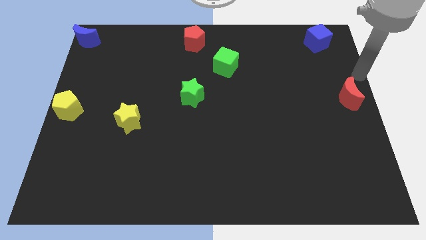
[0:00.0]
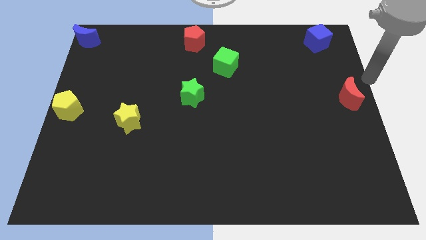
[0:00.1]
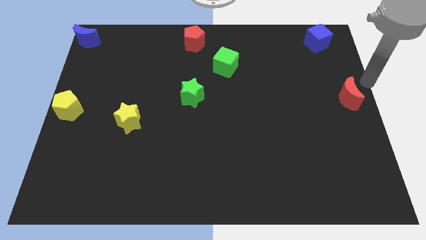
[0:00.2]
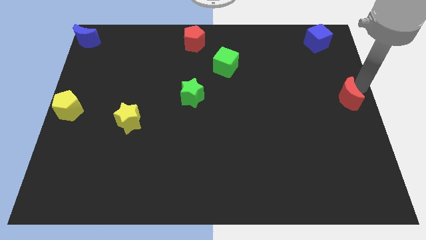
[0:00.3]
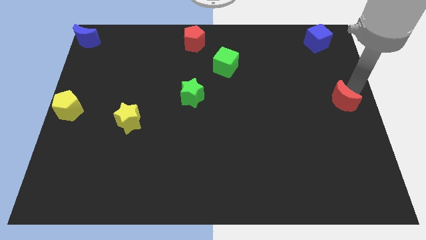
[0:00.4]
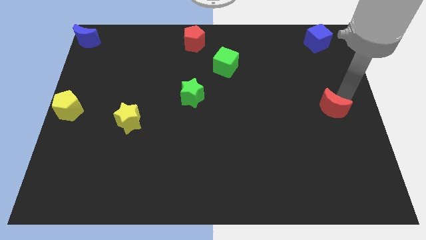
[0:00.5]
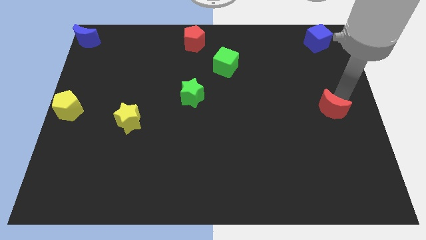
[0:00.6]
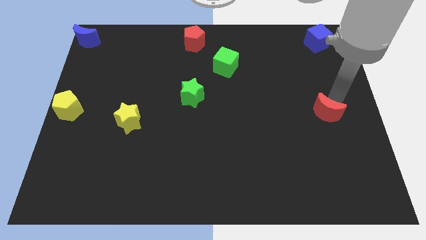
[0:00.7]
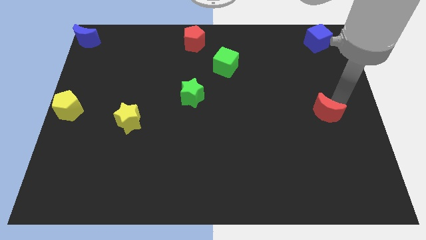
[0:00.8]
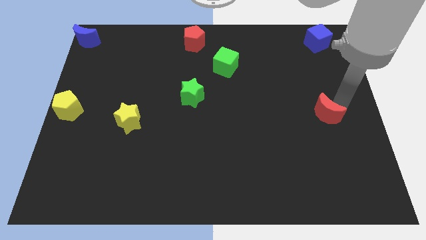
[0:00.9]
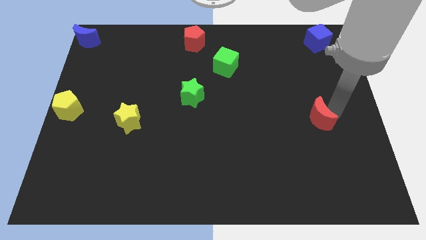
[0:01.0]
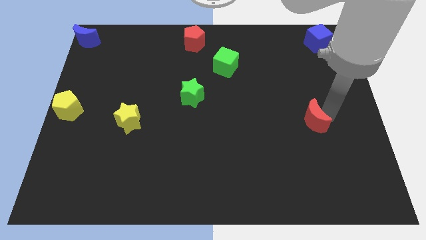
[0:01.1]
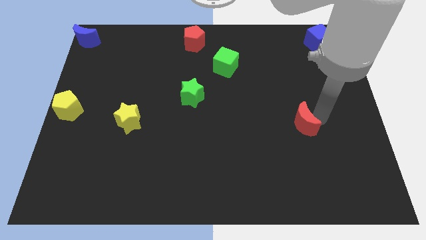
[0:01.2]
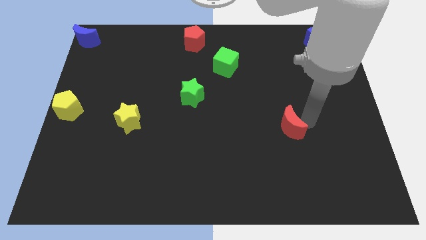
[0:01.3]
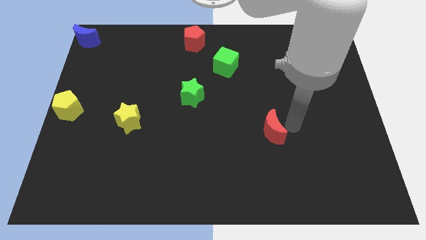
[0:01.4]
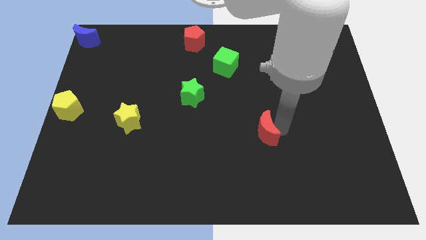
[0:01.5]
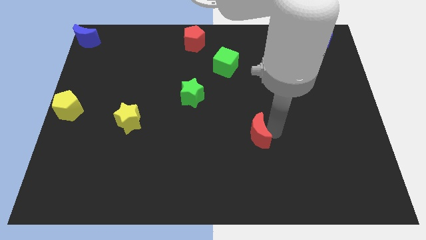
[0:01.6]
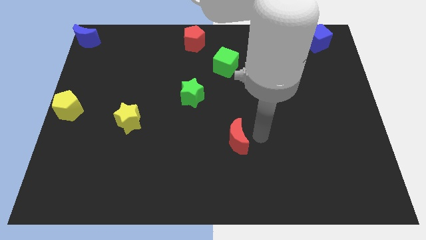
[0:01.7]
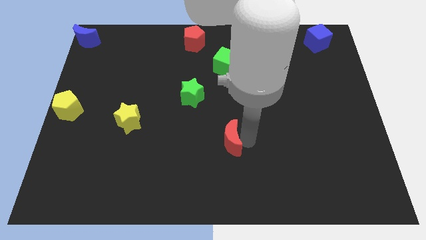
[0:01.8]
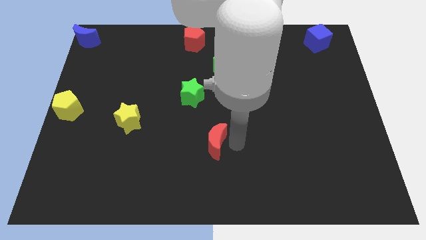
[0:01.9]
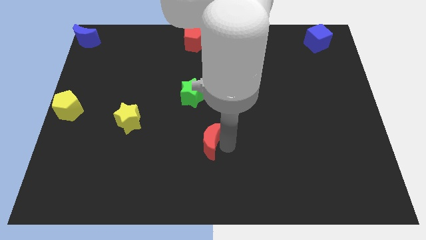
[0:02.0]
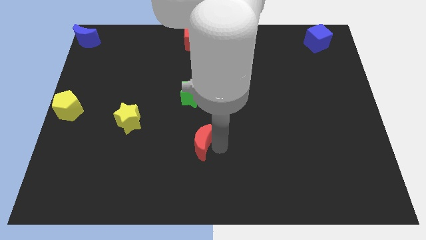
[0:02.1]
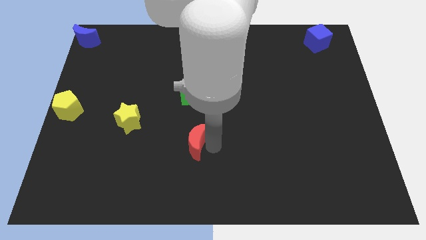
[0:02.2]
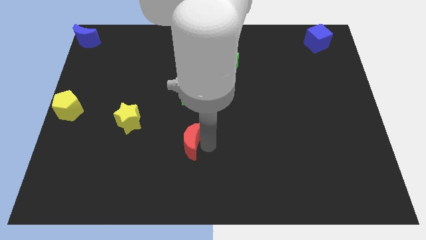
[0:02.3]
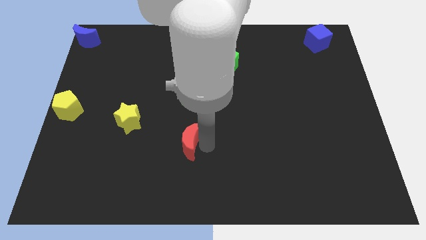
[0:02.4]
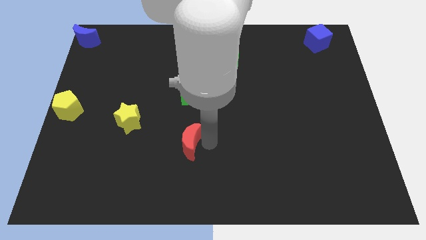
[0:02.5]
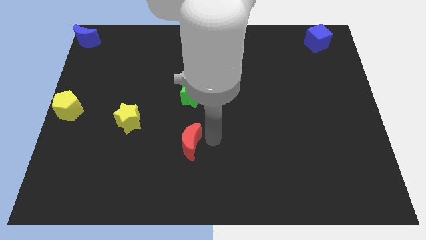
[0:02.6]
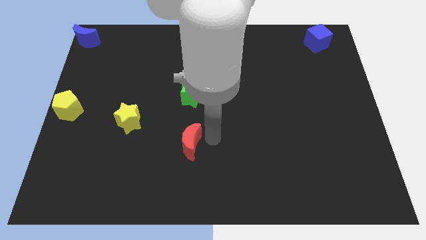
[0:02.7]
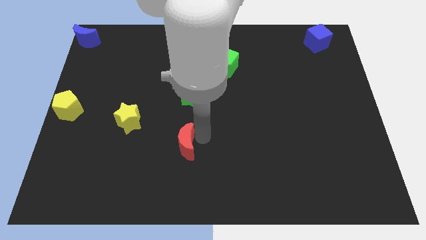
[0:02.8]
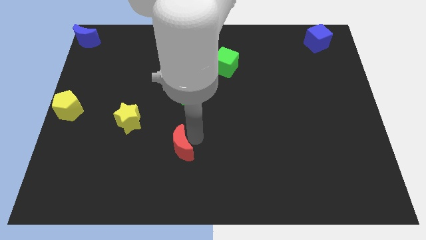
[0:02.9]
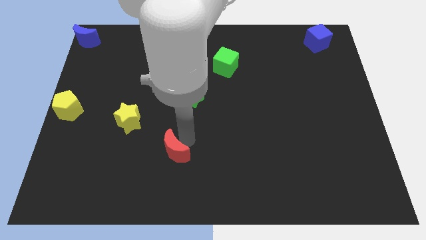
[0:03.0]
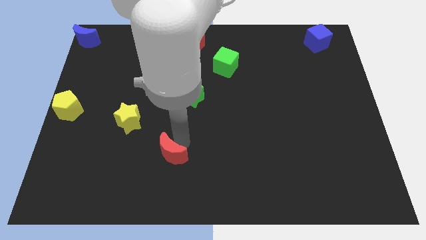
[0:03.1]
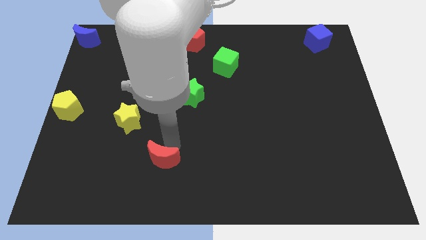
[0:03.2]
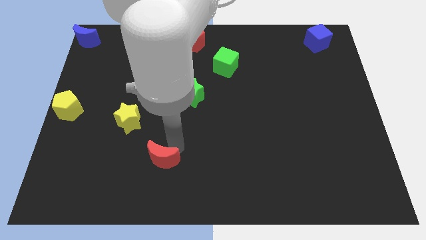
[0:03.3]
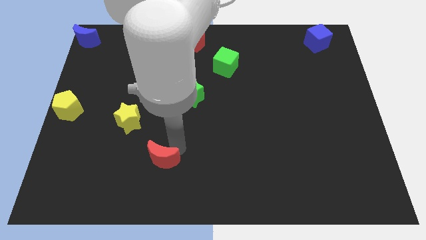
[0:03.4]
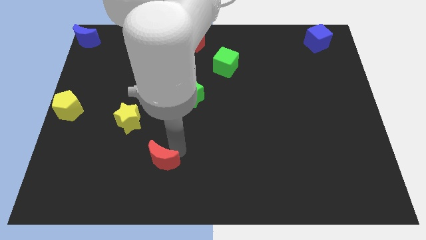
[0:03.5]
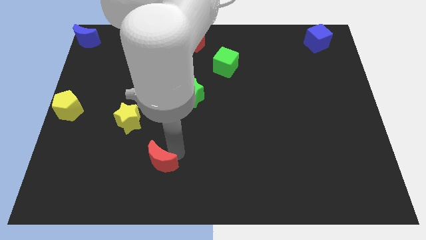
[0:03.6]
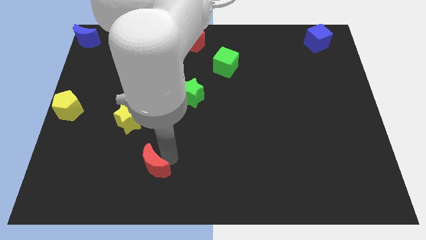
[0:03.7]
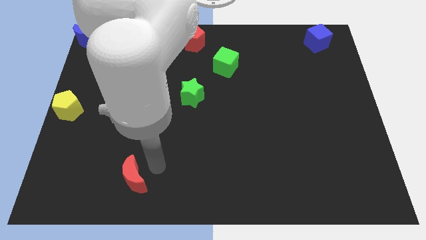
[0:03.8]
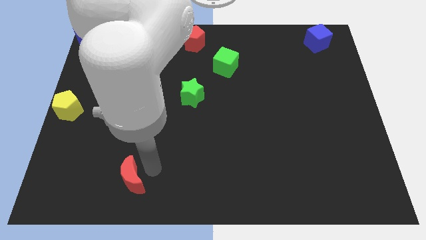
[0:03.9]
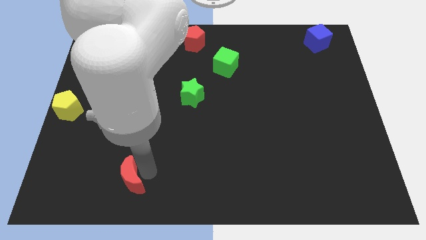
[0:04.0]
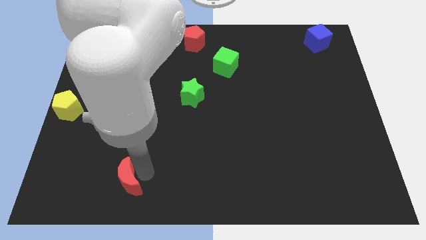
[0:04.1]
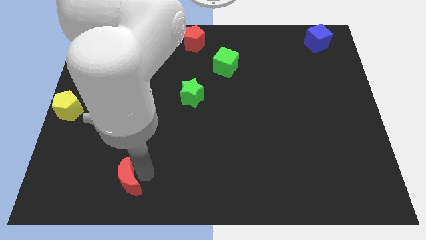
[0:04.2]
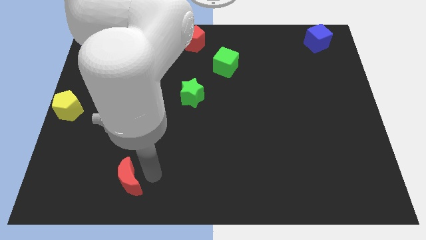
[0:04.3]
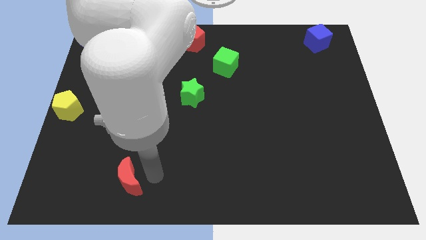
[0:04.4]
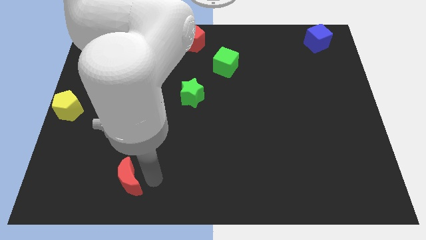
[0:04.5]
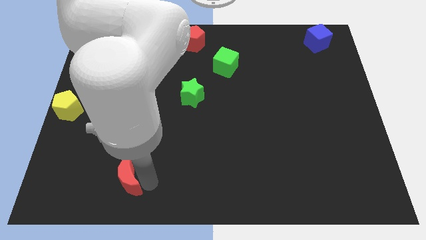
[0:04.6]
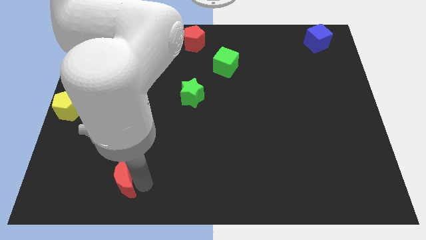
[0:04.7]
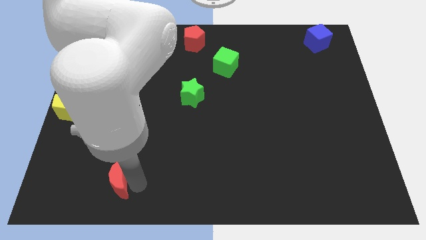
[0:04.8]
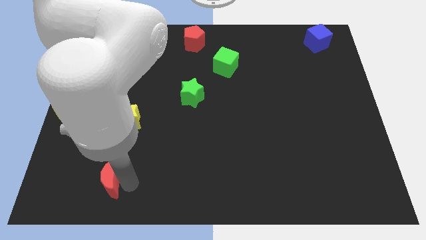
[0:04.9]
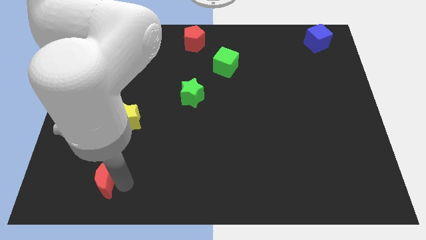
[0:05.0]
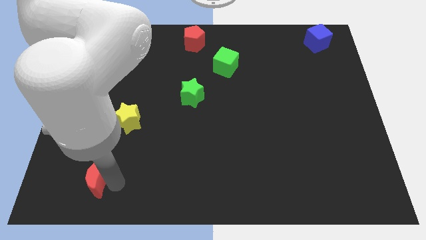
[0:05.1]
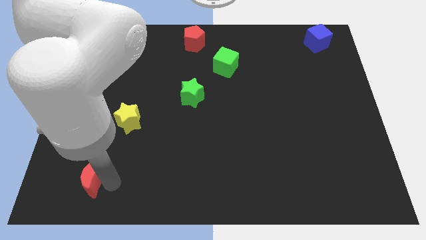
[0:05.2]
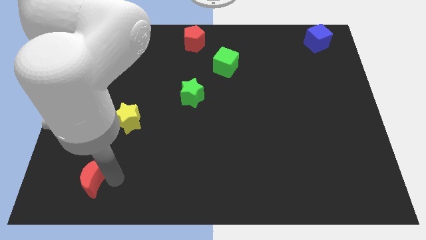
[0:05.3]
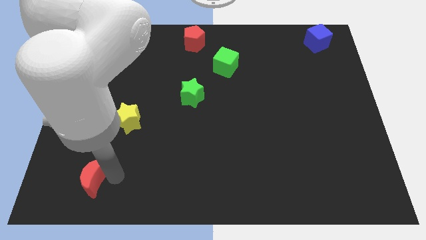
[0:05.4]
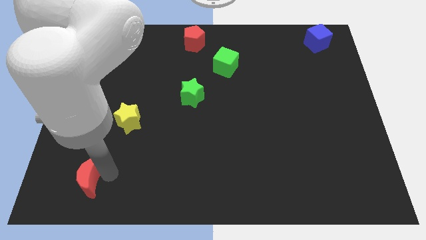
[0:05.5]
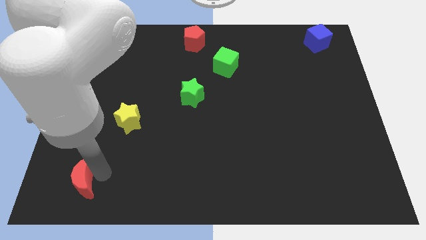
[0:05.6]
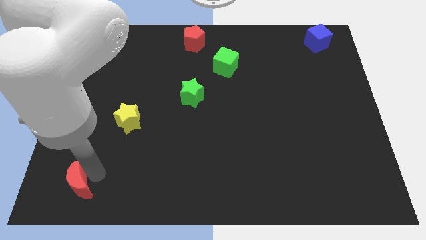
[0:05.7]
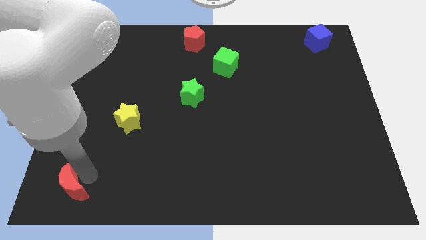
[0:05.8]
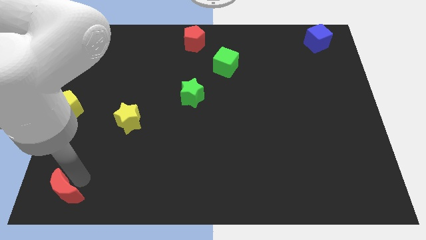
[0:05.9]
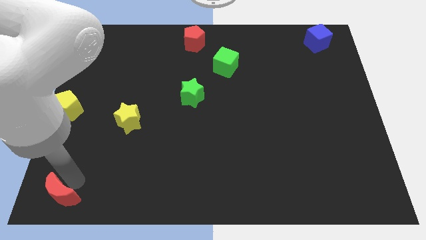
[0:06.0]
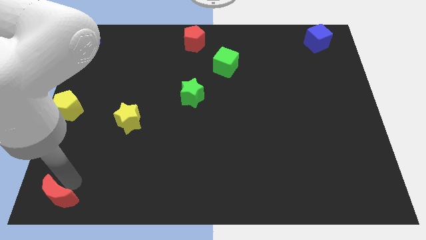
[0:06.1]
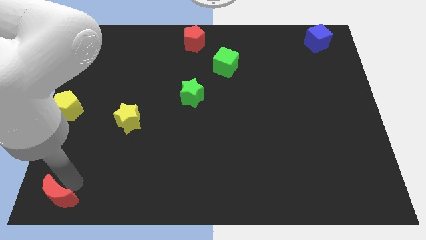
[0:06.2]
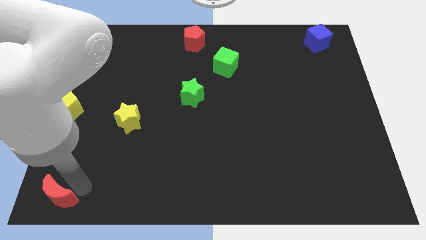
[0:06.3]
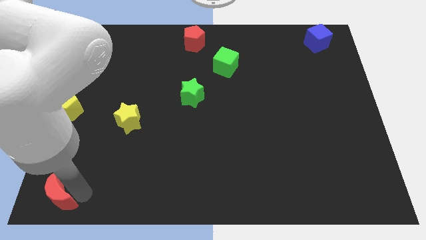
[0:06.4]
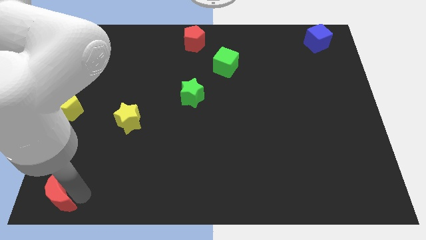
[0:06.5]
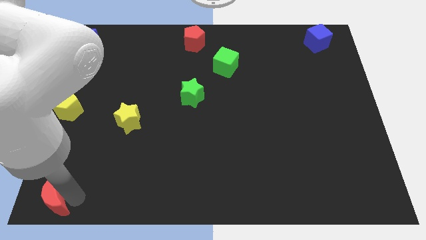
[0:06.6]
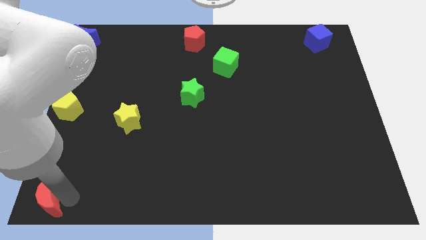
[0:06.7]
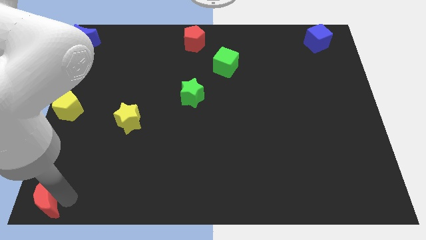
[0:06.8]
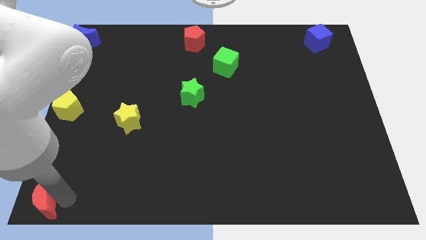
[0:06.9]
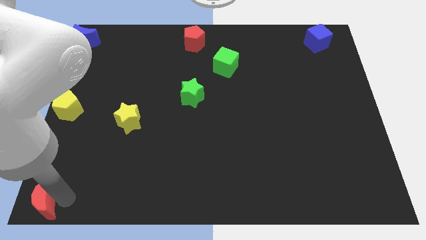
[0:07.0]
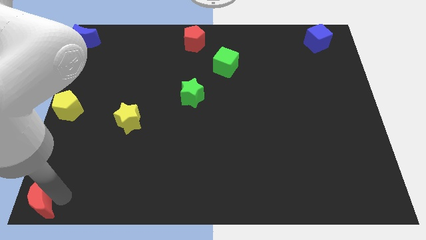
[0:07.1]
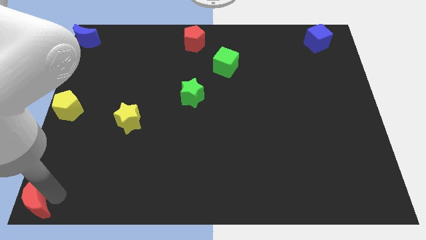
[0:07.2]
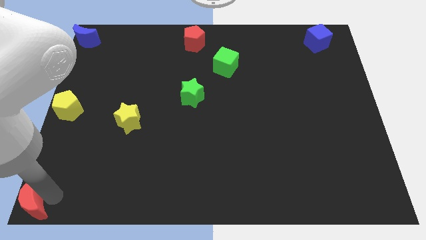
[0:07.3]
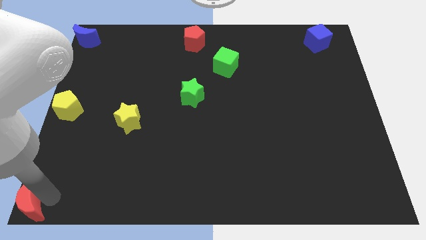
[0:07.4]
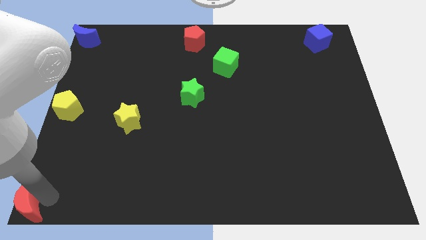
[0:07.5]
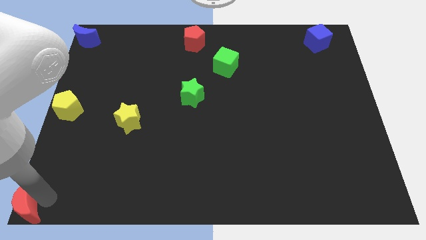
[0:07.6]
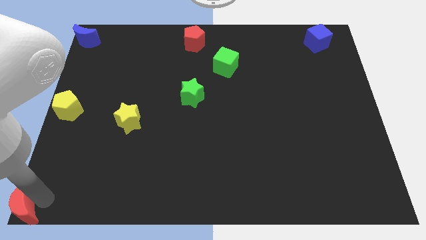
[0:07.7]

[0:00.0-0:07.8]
push the red crescent to the bottom left corner of the board

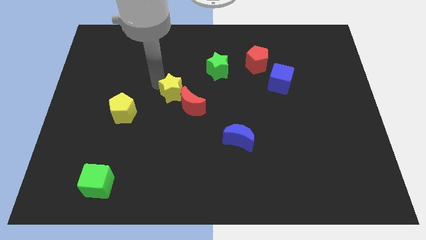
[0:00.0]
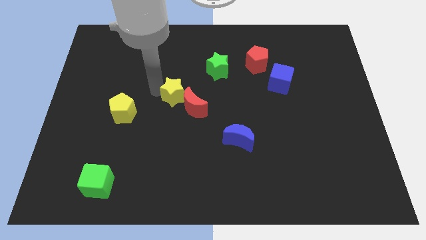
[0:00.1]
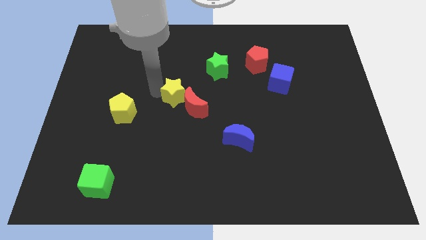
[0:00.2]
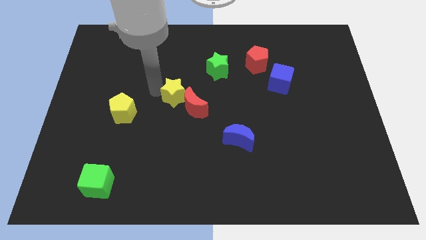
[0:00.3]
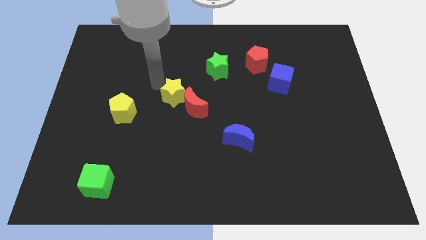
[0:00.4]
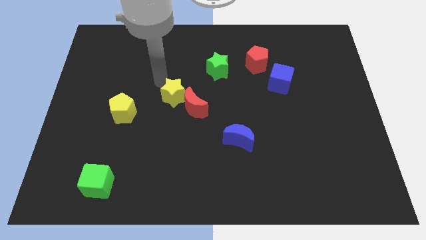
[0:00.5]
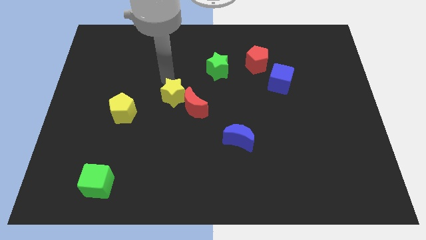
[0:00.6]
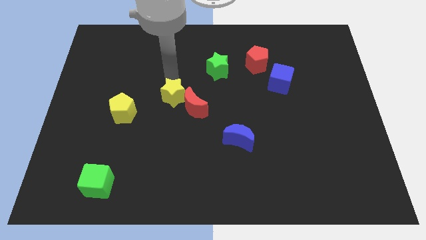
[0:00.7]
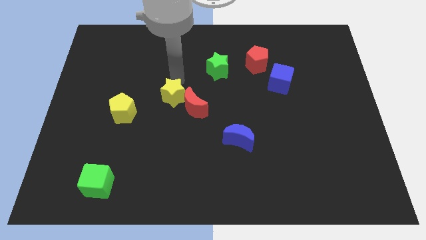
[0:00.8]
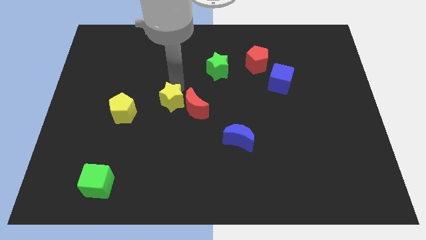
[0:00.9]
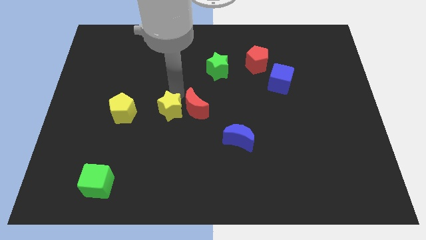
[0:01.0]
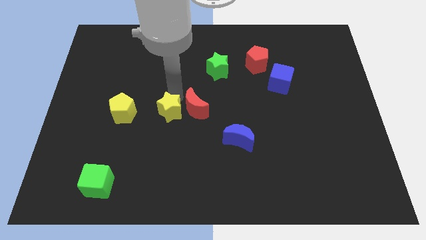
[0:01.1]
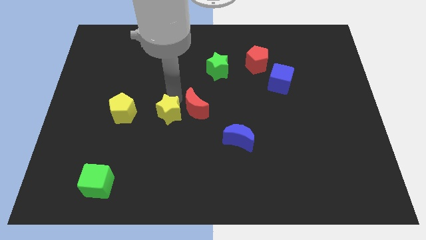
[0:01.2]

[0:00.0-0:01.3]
push yellow star parallel right to yellow pentagon
